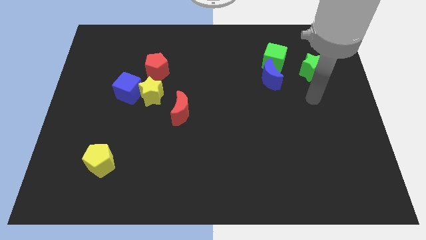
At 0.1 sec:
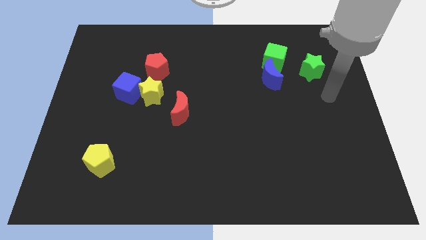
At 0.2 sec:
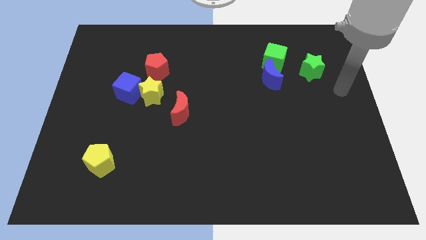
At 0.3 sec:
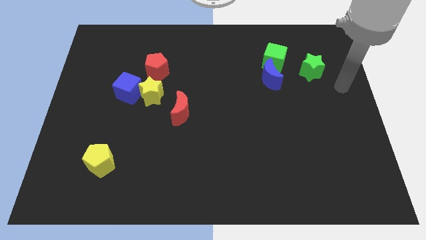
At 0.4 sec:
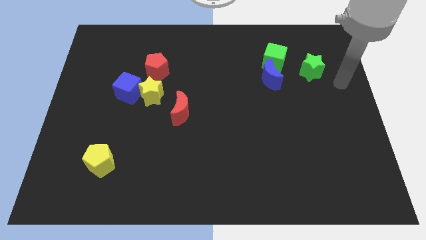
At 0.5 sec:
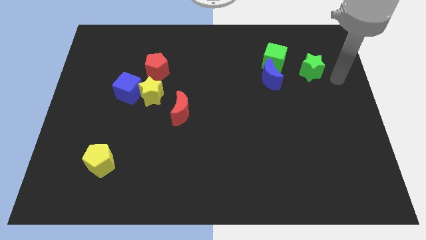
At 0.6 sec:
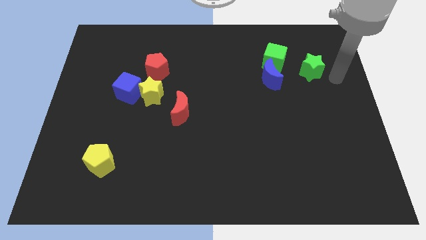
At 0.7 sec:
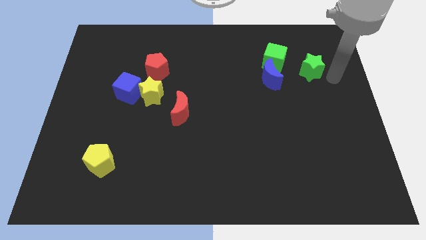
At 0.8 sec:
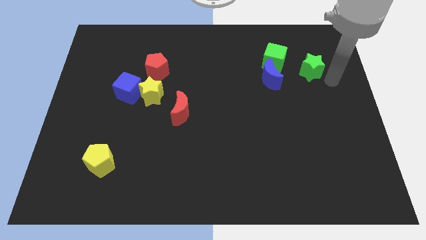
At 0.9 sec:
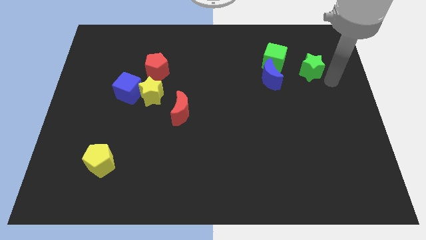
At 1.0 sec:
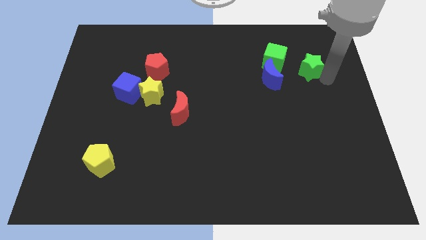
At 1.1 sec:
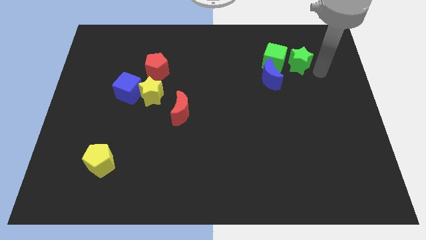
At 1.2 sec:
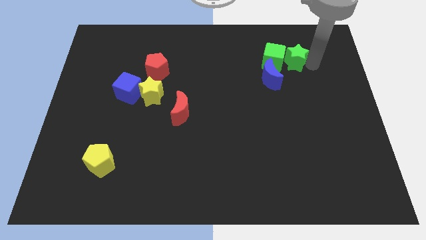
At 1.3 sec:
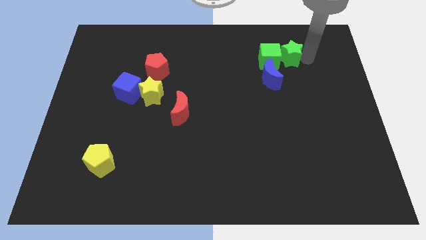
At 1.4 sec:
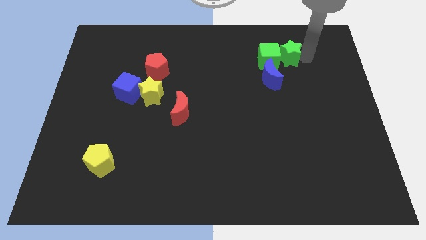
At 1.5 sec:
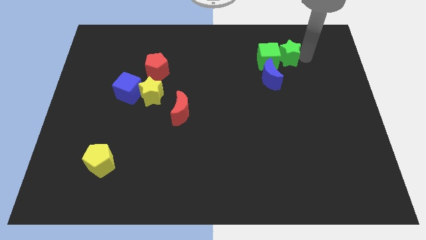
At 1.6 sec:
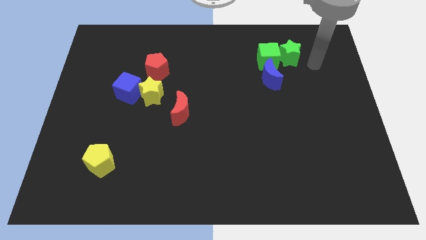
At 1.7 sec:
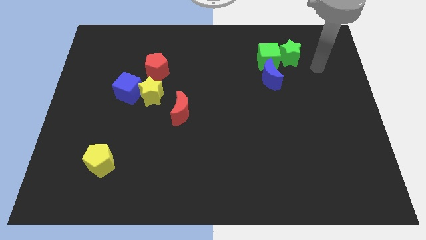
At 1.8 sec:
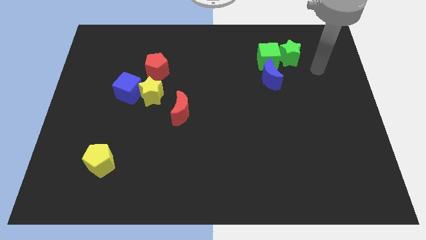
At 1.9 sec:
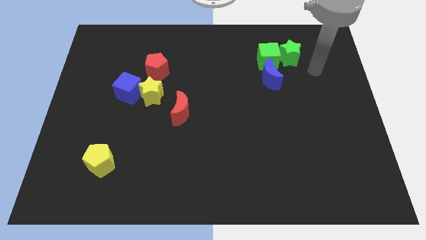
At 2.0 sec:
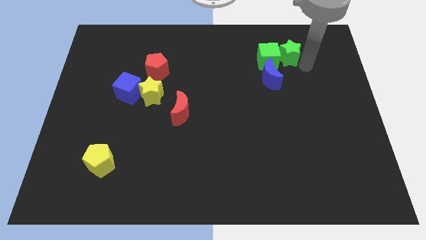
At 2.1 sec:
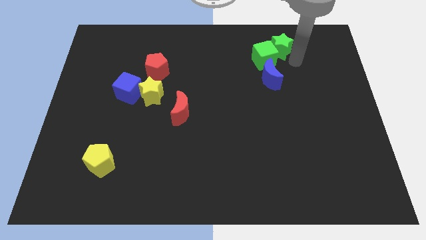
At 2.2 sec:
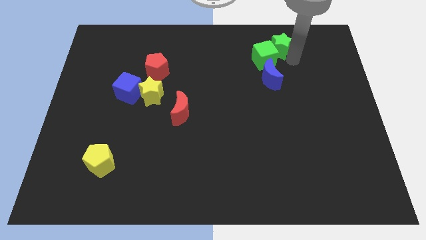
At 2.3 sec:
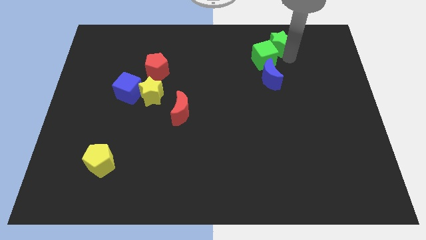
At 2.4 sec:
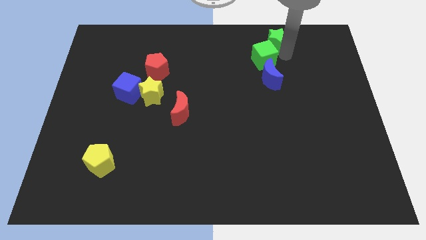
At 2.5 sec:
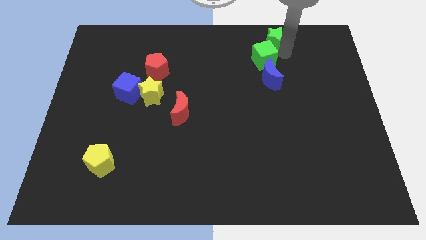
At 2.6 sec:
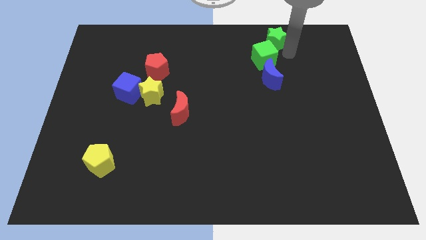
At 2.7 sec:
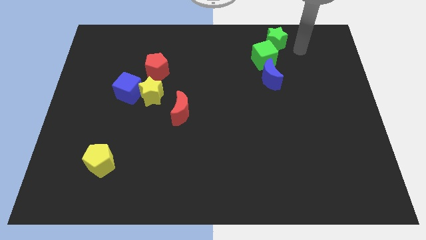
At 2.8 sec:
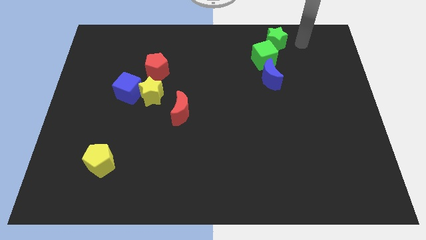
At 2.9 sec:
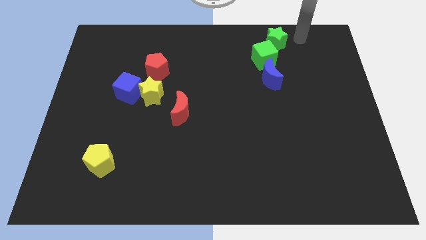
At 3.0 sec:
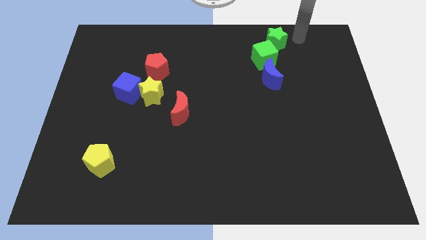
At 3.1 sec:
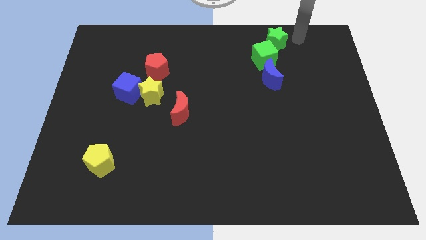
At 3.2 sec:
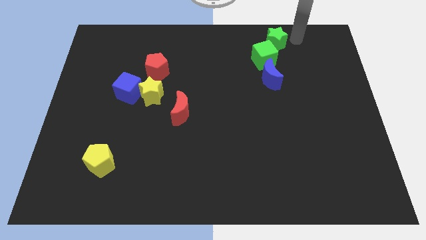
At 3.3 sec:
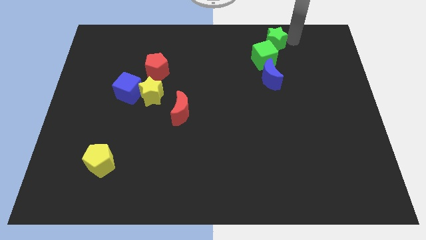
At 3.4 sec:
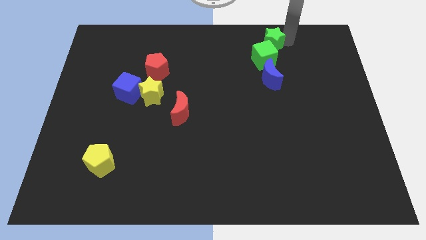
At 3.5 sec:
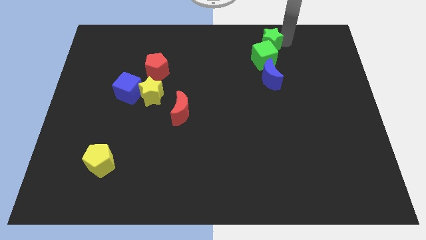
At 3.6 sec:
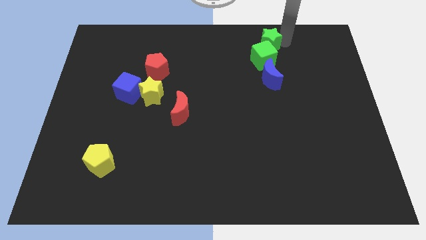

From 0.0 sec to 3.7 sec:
push the green star into the green cube

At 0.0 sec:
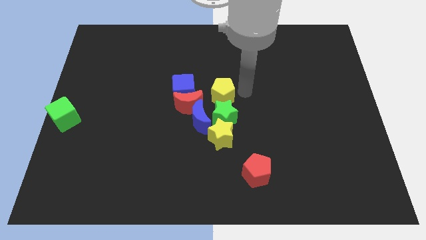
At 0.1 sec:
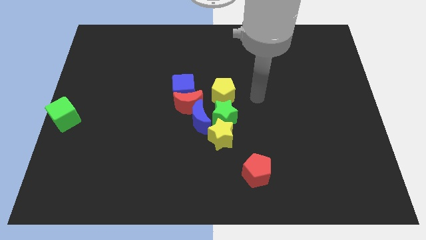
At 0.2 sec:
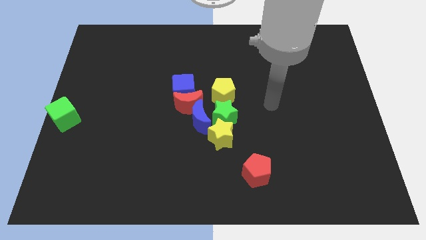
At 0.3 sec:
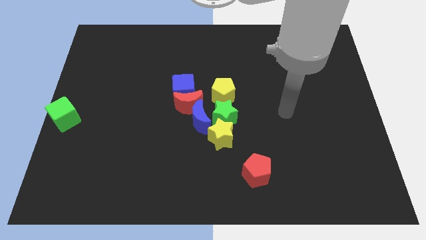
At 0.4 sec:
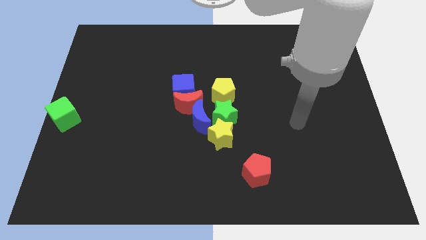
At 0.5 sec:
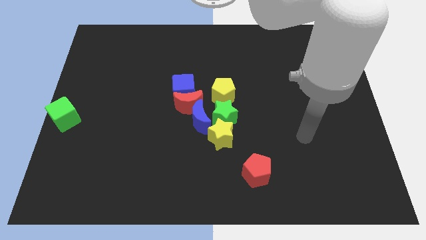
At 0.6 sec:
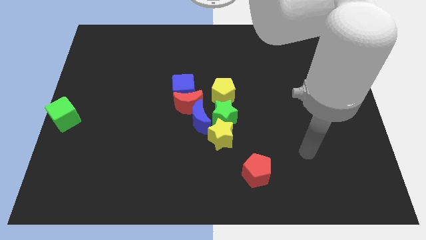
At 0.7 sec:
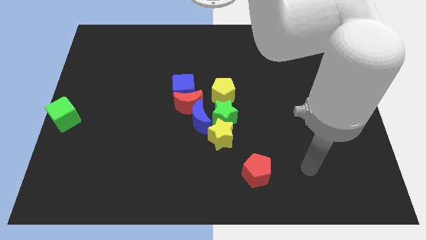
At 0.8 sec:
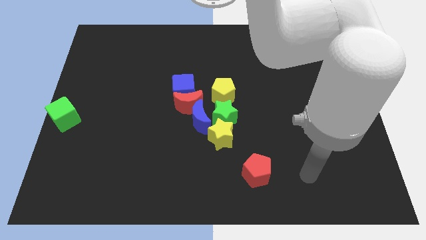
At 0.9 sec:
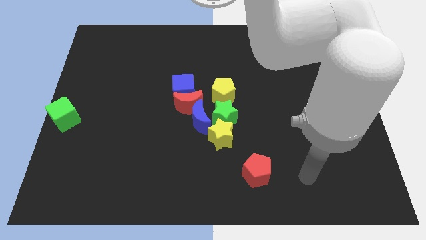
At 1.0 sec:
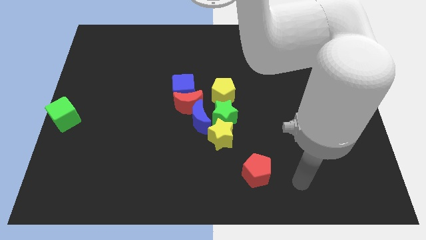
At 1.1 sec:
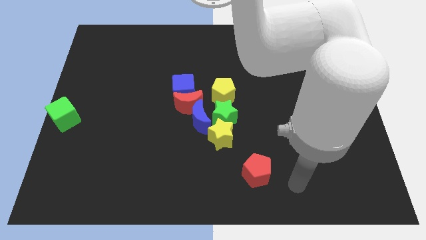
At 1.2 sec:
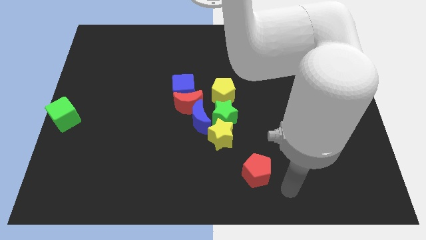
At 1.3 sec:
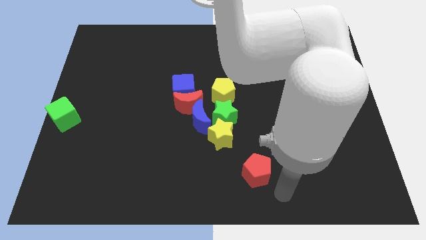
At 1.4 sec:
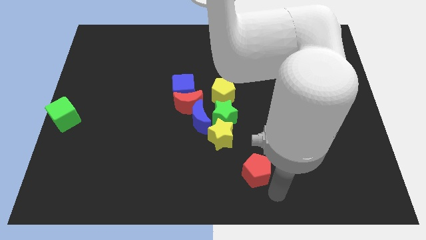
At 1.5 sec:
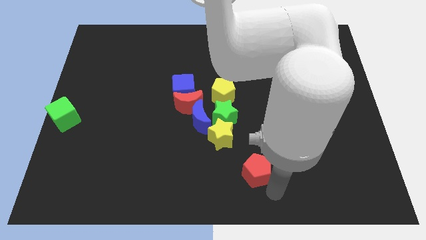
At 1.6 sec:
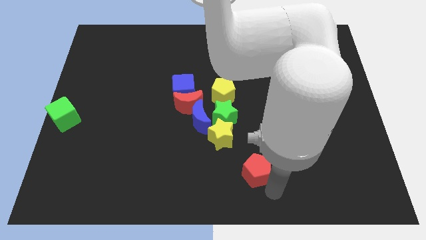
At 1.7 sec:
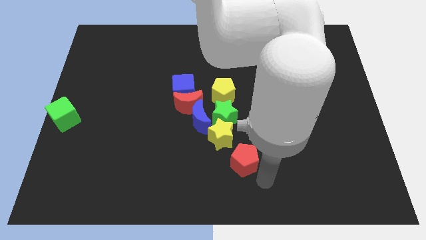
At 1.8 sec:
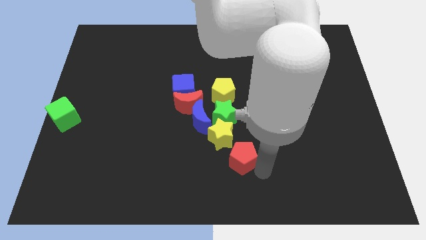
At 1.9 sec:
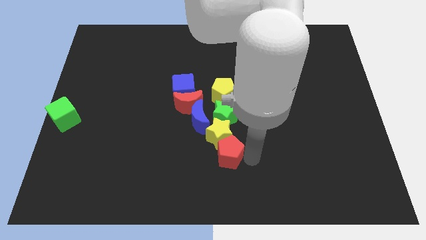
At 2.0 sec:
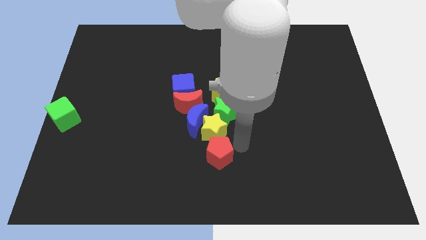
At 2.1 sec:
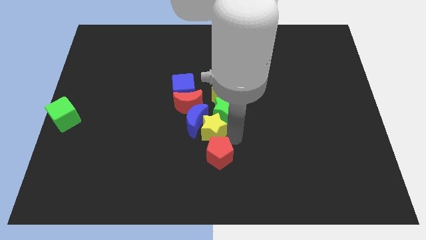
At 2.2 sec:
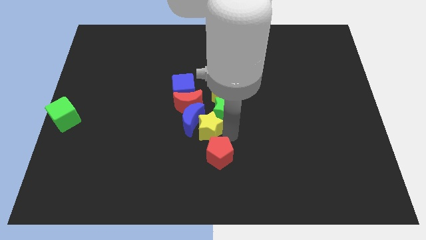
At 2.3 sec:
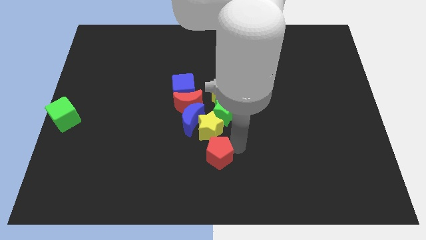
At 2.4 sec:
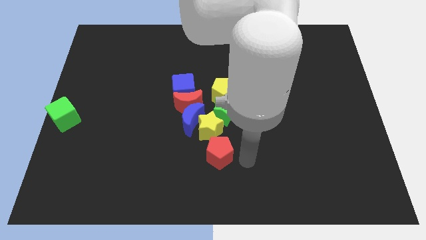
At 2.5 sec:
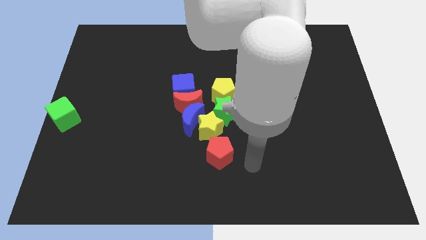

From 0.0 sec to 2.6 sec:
push the red pentagon into the yellow star

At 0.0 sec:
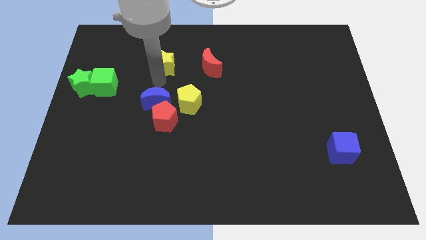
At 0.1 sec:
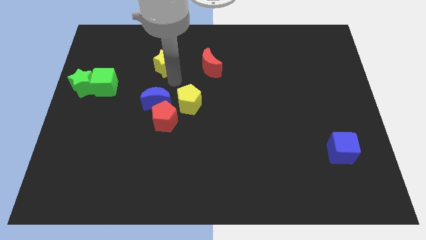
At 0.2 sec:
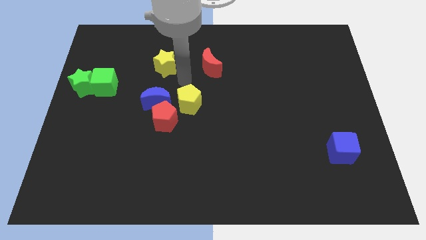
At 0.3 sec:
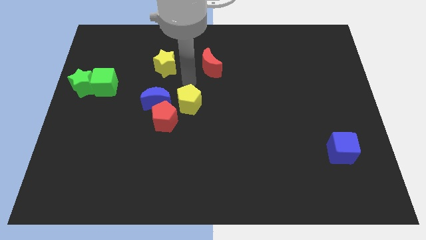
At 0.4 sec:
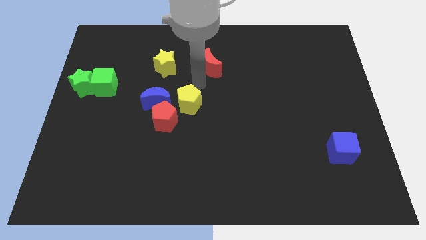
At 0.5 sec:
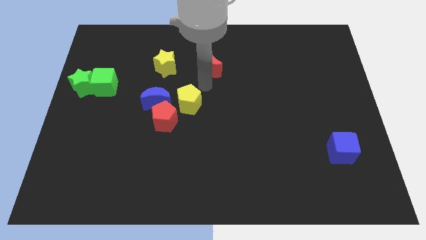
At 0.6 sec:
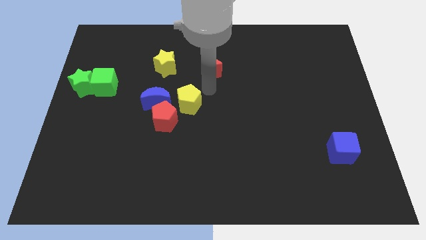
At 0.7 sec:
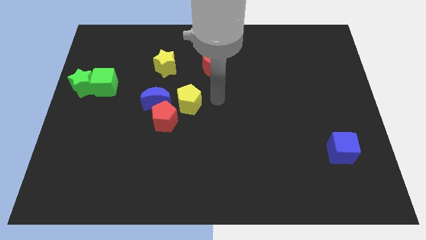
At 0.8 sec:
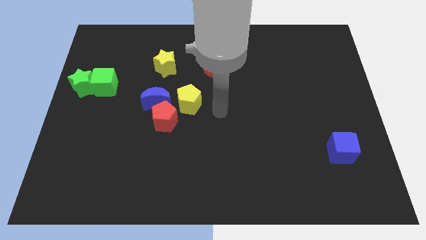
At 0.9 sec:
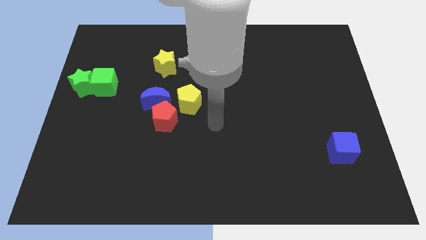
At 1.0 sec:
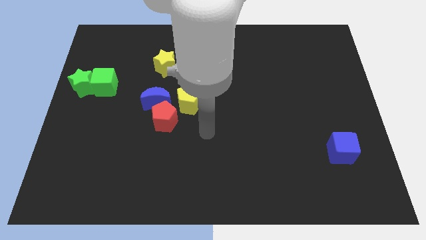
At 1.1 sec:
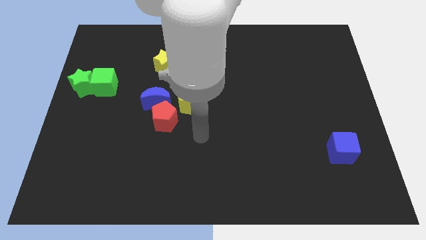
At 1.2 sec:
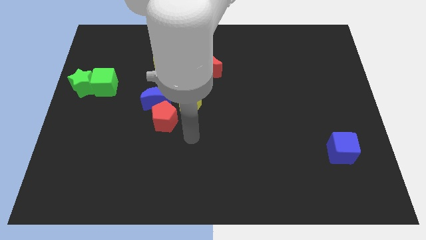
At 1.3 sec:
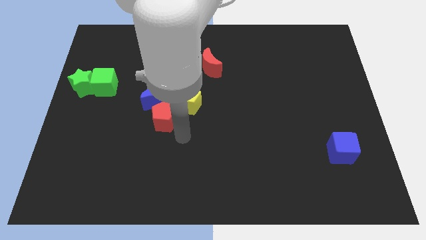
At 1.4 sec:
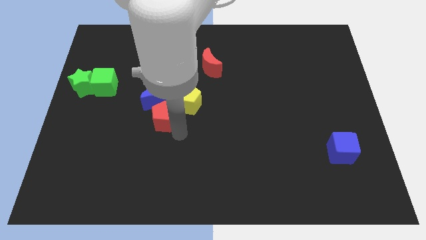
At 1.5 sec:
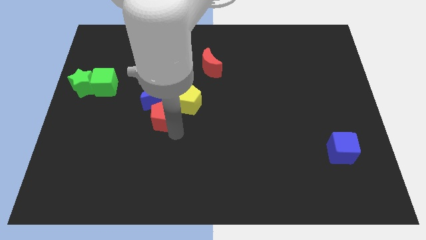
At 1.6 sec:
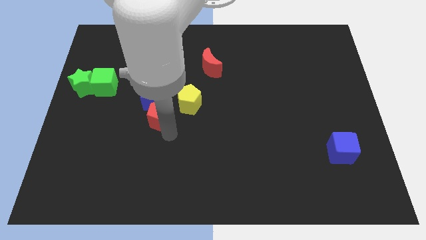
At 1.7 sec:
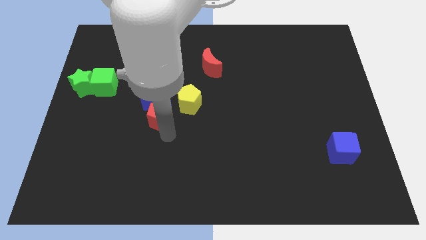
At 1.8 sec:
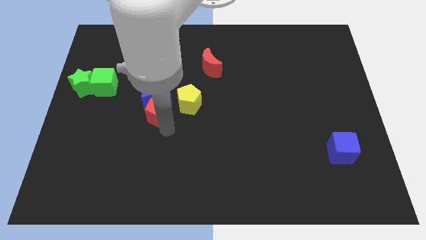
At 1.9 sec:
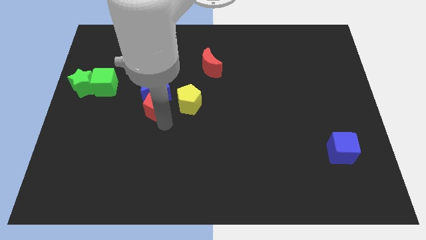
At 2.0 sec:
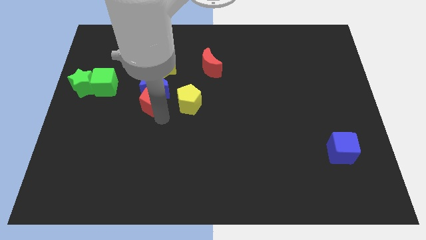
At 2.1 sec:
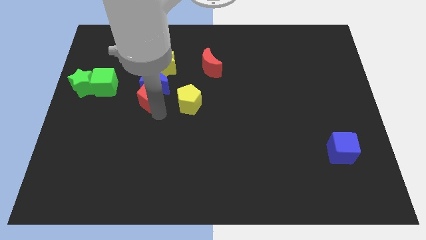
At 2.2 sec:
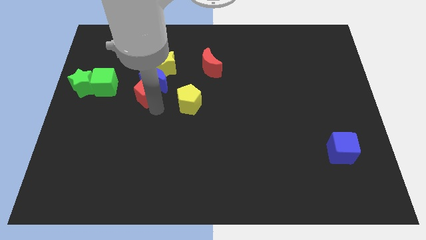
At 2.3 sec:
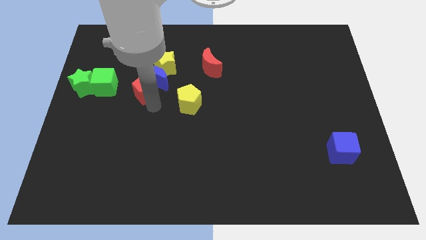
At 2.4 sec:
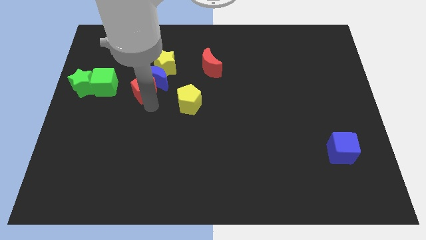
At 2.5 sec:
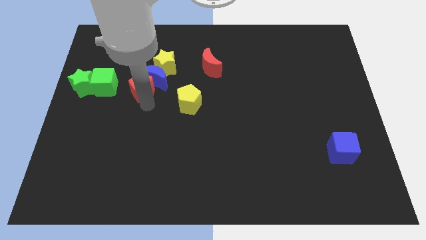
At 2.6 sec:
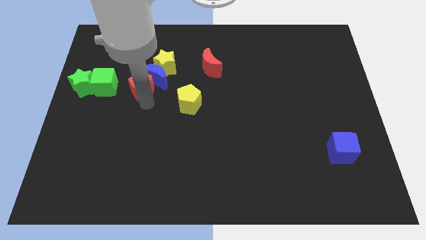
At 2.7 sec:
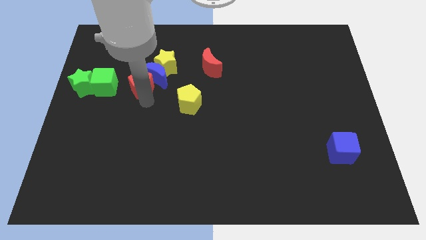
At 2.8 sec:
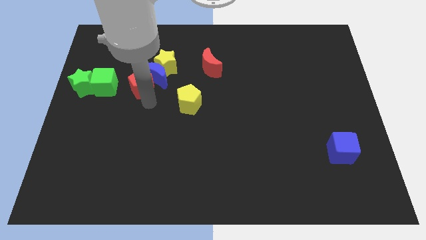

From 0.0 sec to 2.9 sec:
place red pentagon parallel to green cube
